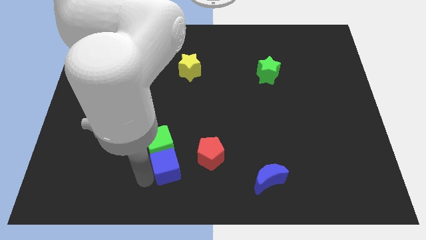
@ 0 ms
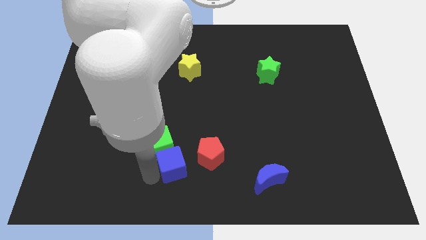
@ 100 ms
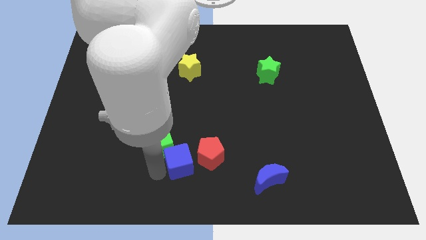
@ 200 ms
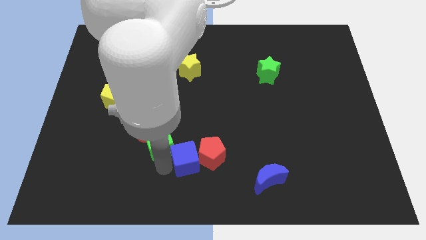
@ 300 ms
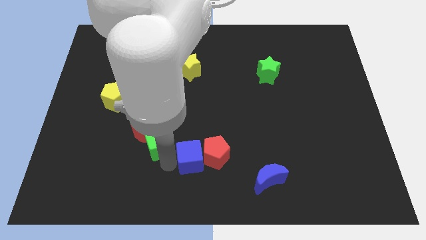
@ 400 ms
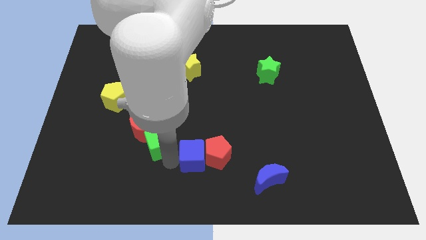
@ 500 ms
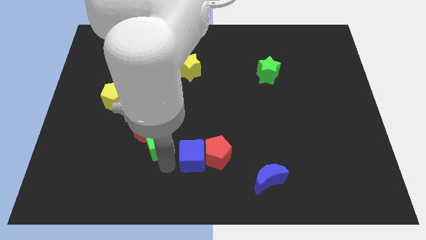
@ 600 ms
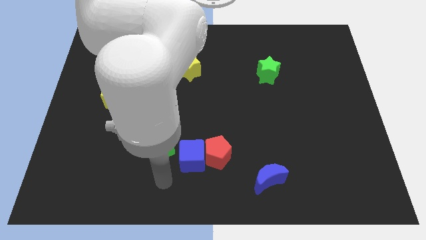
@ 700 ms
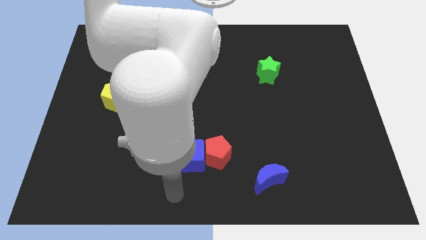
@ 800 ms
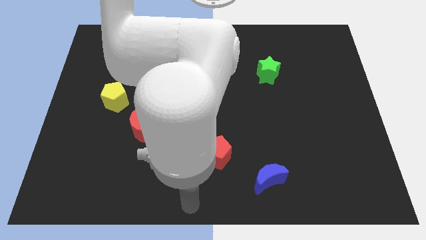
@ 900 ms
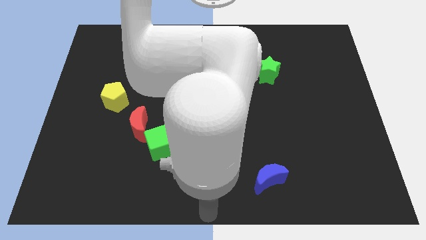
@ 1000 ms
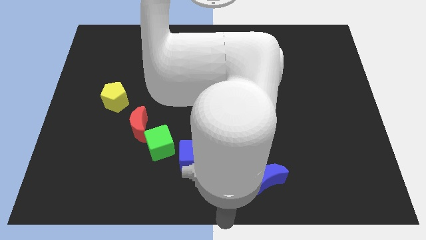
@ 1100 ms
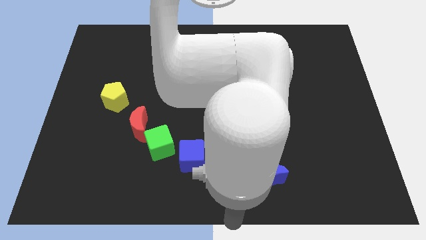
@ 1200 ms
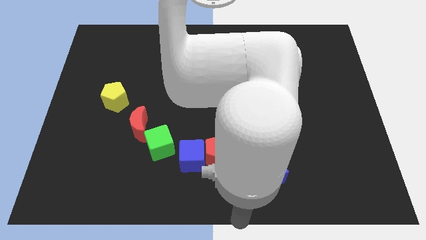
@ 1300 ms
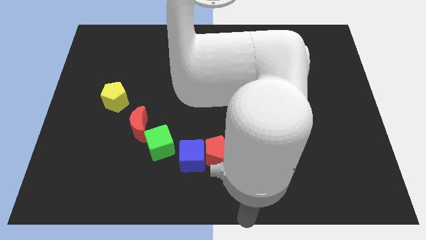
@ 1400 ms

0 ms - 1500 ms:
push the blue cube into the red pentagon

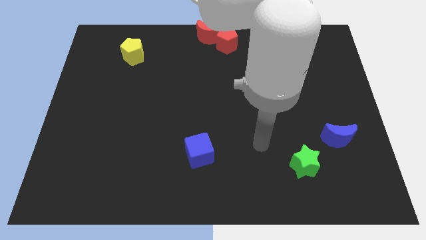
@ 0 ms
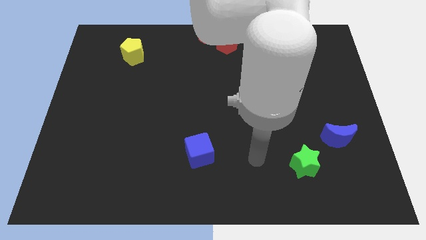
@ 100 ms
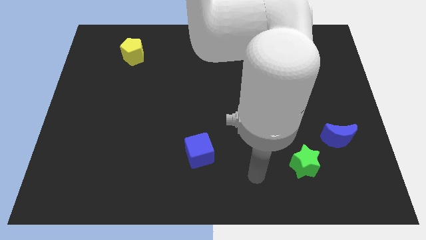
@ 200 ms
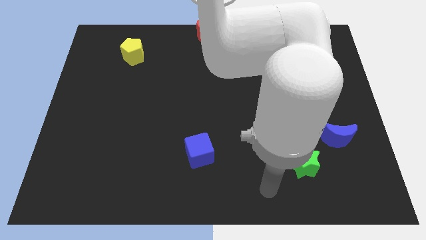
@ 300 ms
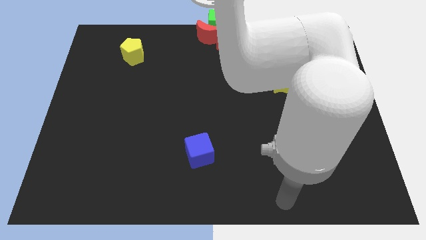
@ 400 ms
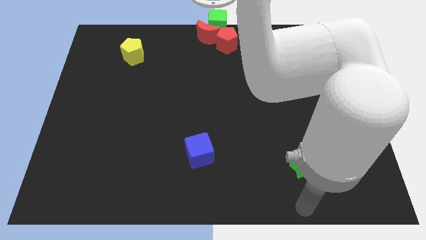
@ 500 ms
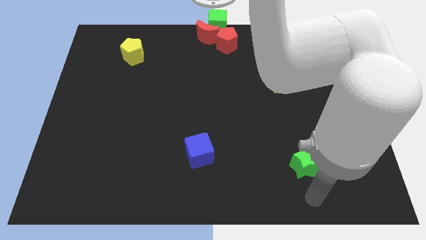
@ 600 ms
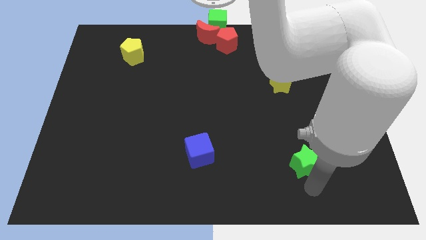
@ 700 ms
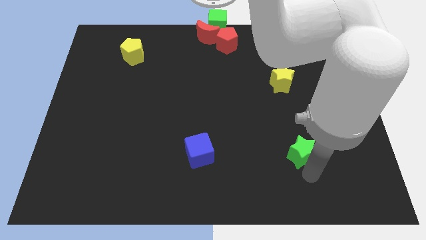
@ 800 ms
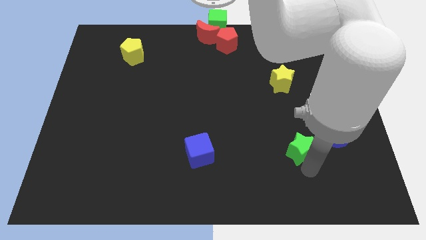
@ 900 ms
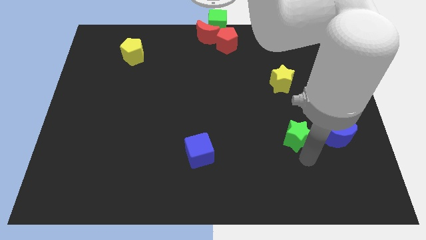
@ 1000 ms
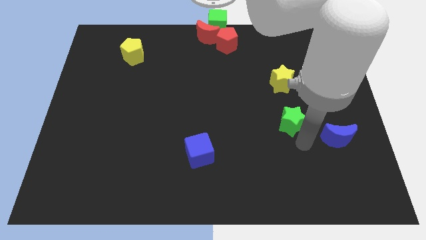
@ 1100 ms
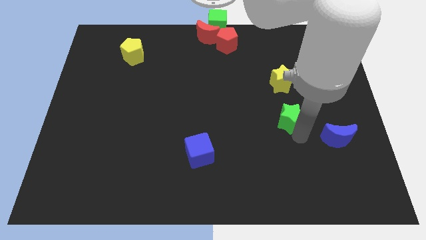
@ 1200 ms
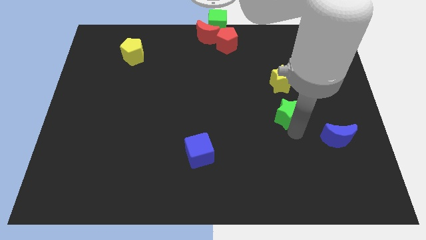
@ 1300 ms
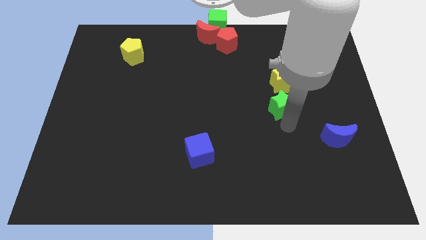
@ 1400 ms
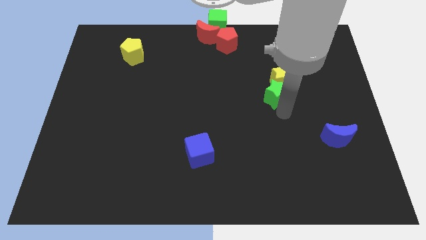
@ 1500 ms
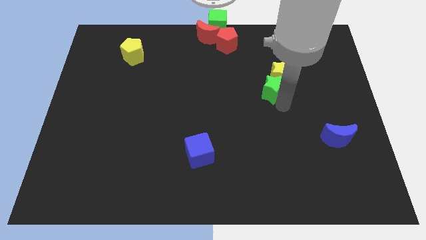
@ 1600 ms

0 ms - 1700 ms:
push the green star into yellow star

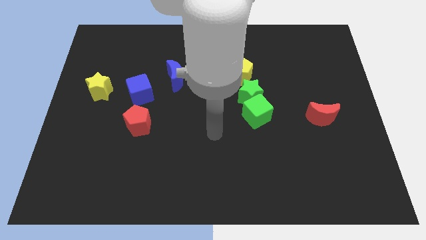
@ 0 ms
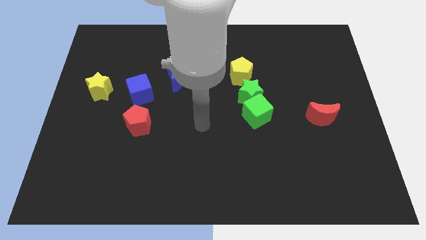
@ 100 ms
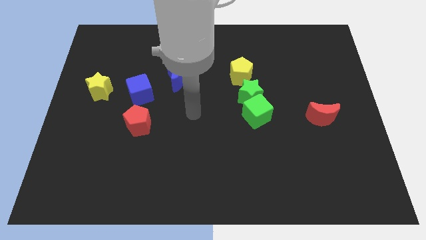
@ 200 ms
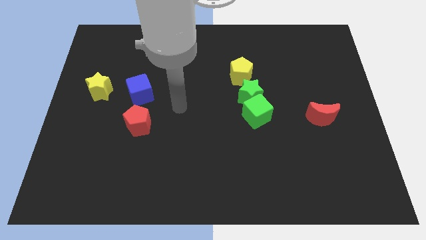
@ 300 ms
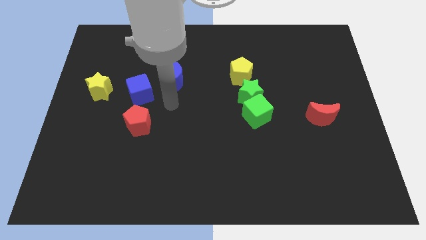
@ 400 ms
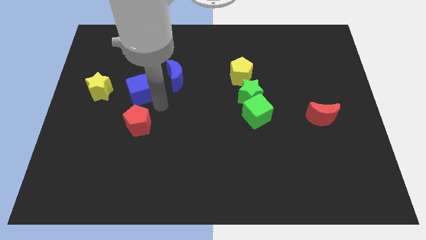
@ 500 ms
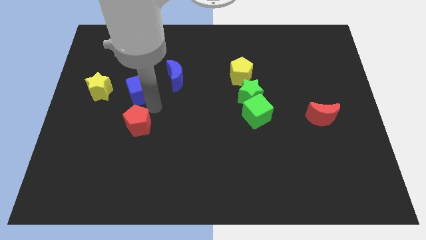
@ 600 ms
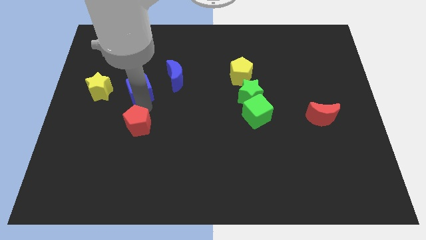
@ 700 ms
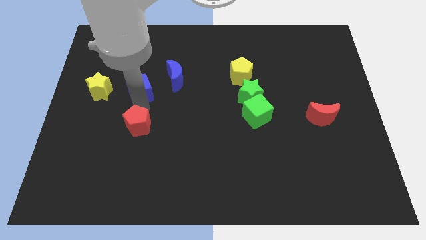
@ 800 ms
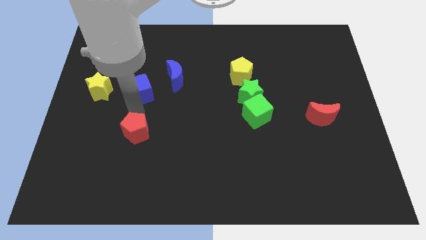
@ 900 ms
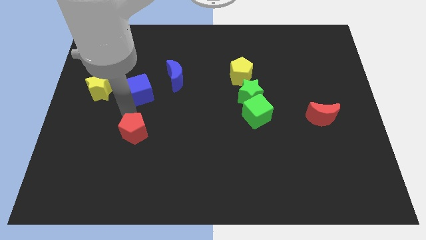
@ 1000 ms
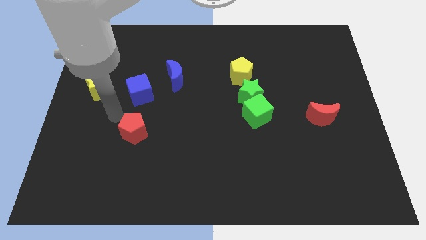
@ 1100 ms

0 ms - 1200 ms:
place your hand at the top of the red pentagon

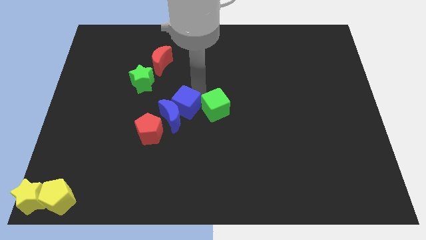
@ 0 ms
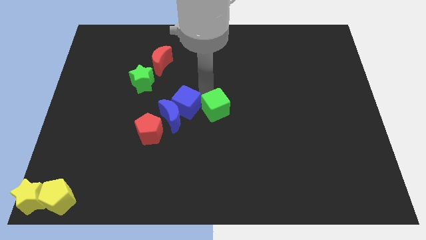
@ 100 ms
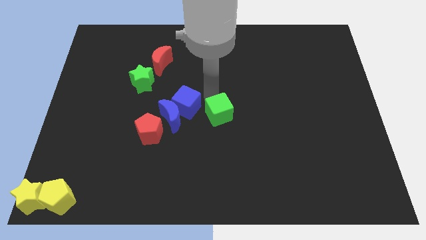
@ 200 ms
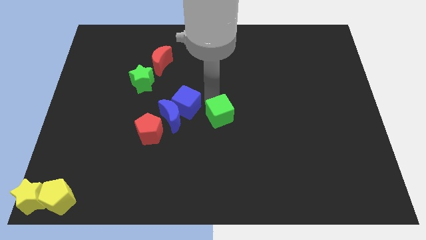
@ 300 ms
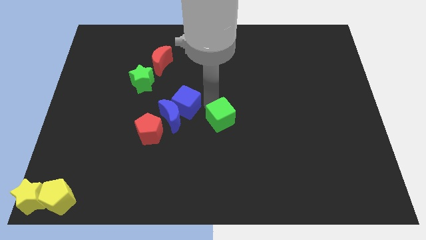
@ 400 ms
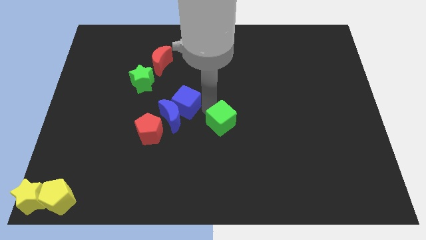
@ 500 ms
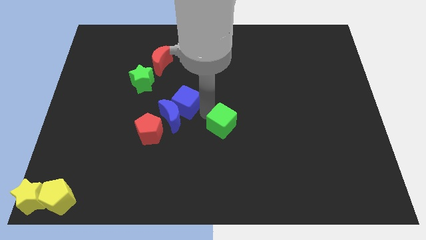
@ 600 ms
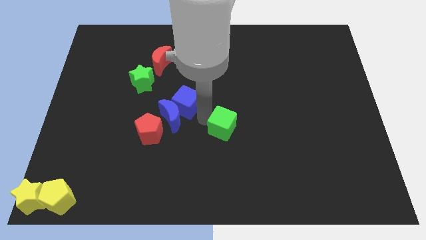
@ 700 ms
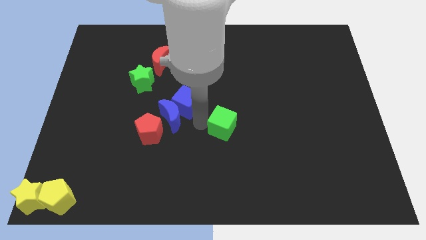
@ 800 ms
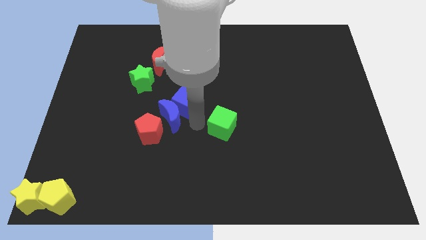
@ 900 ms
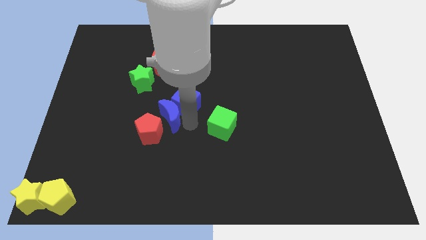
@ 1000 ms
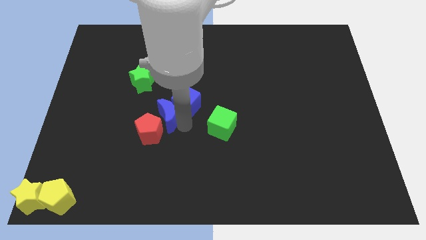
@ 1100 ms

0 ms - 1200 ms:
move the green cube away from the blue cube

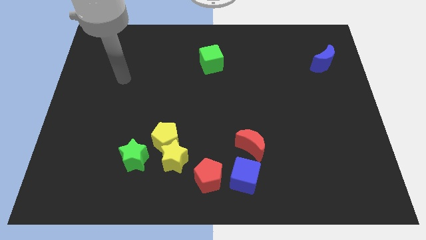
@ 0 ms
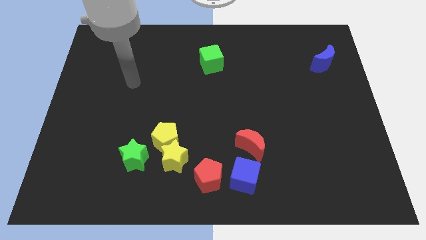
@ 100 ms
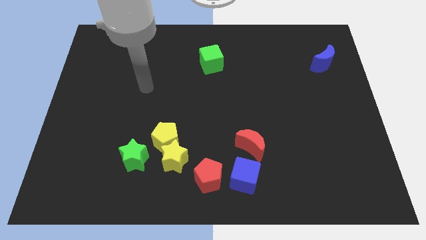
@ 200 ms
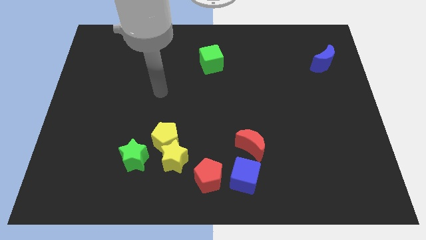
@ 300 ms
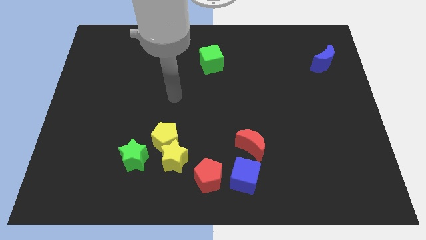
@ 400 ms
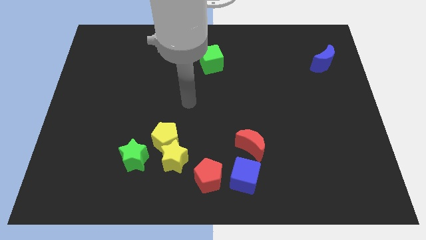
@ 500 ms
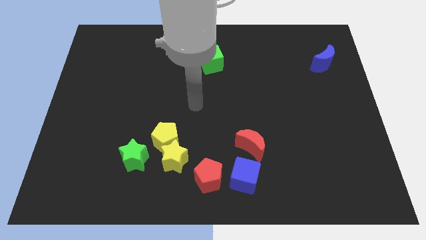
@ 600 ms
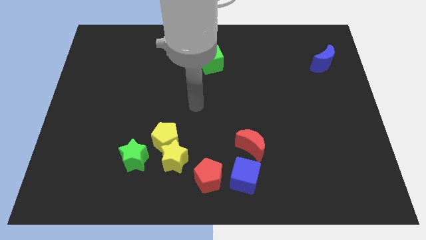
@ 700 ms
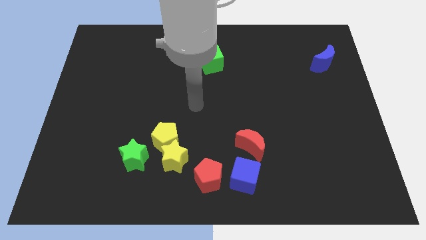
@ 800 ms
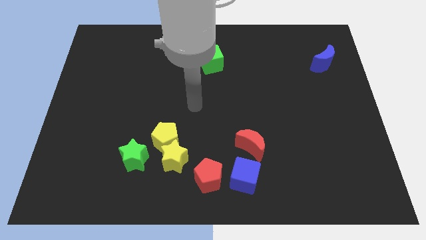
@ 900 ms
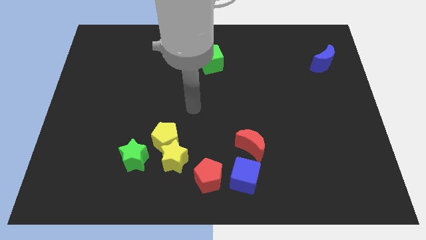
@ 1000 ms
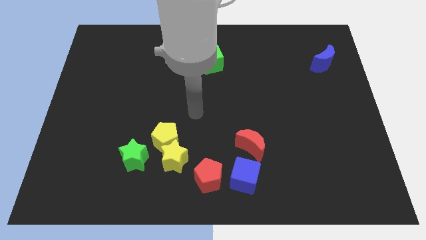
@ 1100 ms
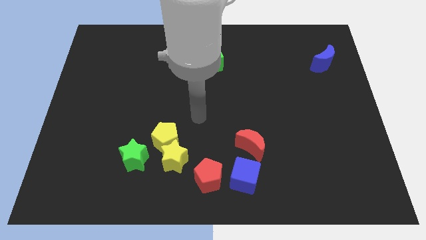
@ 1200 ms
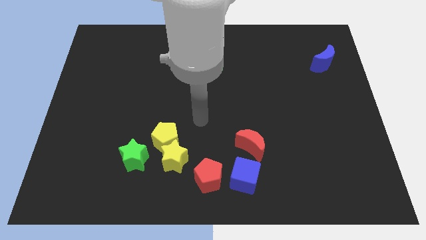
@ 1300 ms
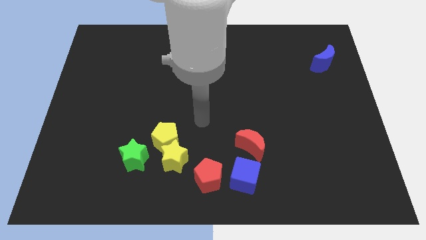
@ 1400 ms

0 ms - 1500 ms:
move robot arm towards the yellow pentagon

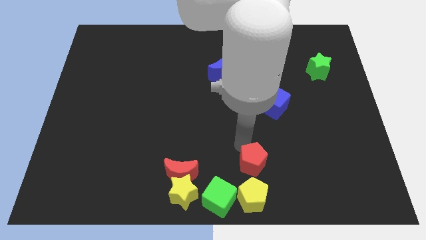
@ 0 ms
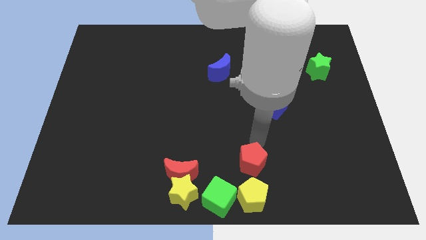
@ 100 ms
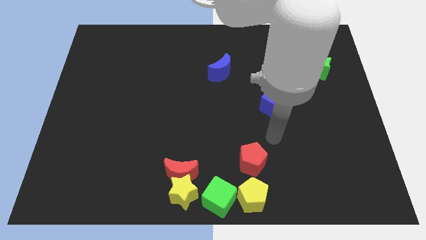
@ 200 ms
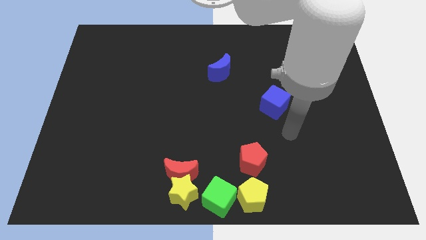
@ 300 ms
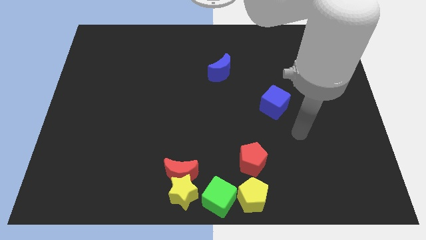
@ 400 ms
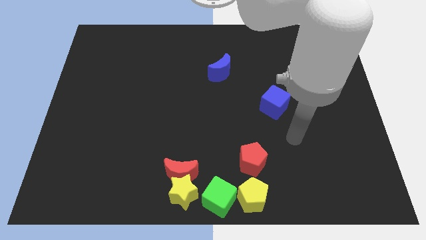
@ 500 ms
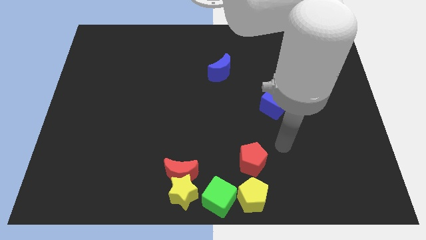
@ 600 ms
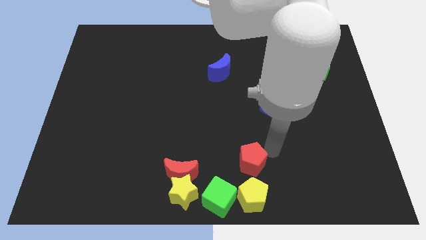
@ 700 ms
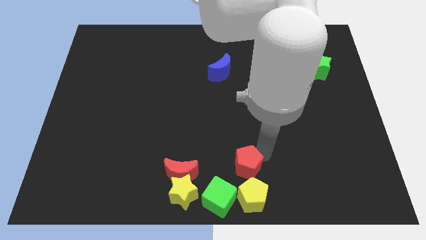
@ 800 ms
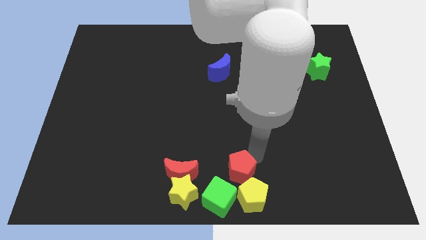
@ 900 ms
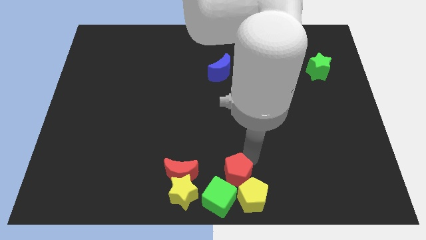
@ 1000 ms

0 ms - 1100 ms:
move red pentagon left above the yellow pentagon

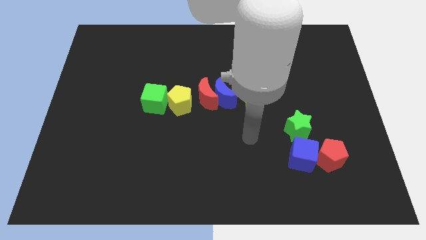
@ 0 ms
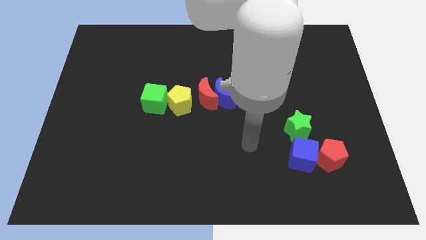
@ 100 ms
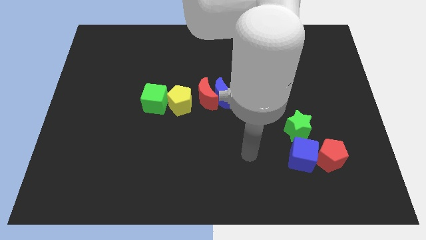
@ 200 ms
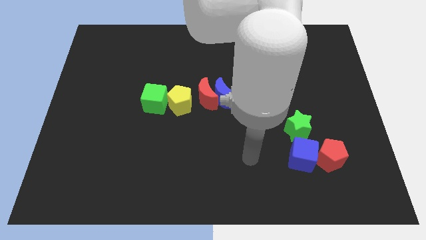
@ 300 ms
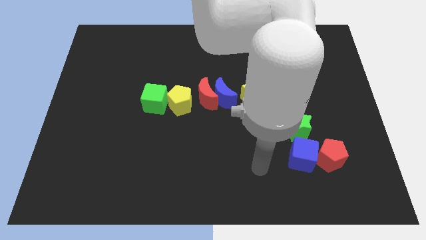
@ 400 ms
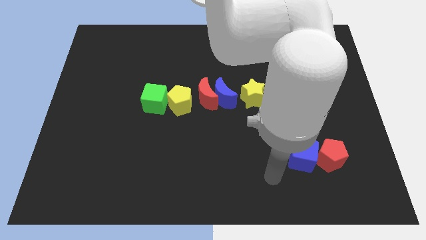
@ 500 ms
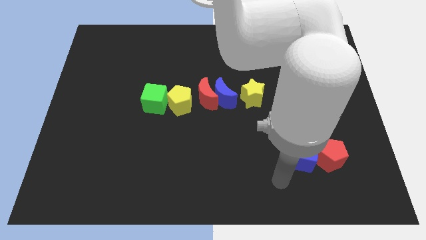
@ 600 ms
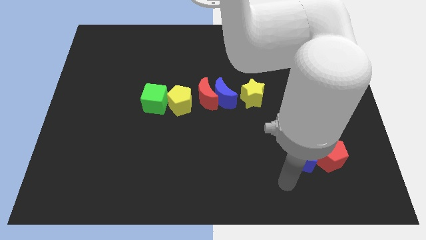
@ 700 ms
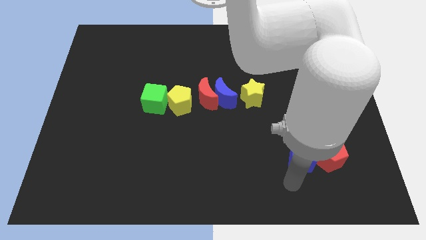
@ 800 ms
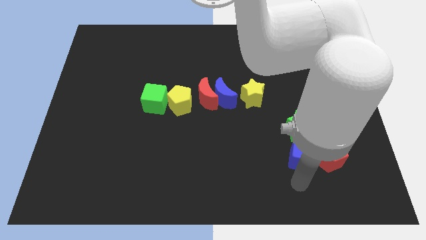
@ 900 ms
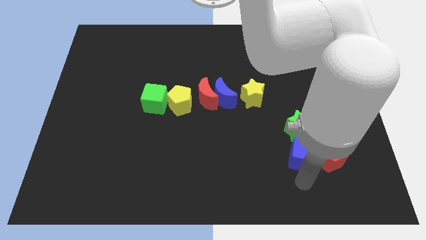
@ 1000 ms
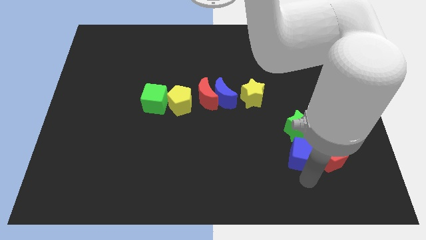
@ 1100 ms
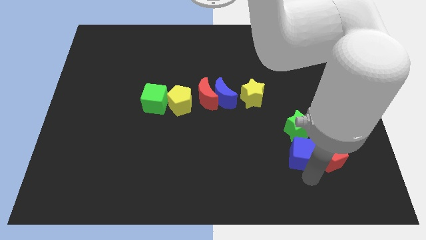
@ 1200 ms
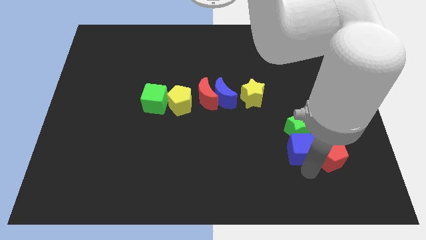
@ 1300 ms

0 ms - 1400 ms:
move your arm to bottom of blue cube
